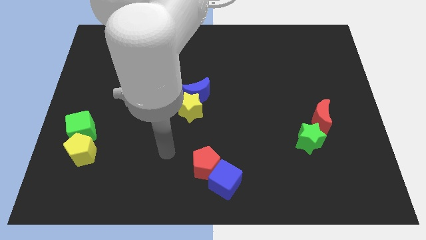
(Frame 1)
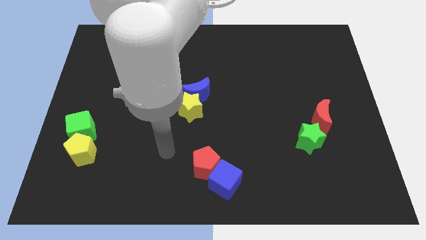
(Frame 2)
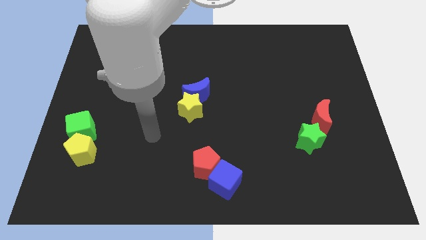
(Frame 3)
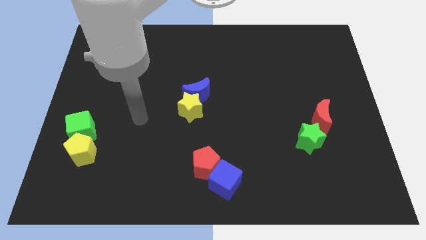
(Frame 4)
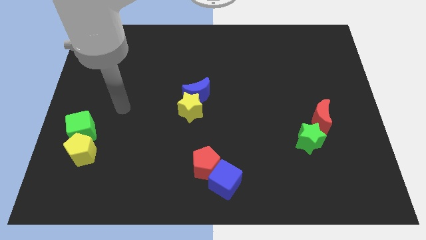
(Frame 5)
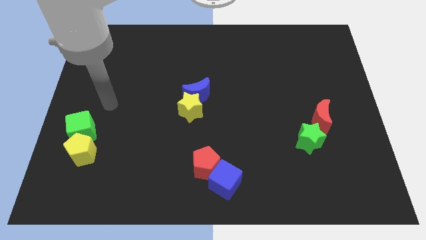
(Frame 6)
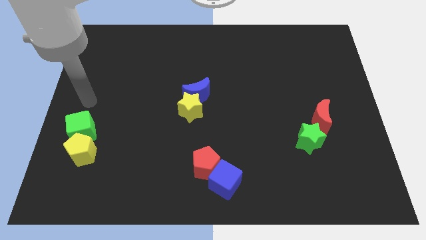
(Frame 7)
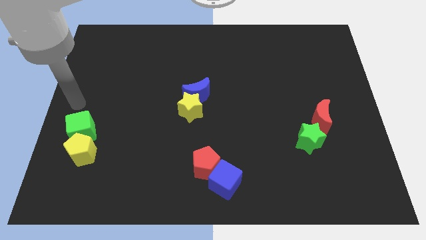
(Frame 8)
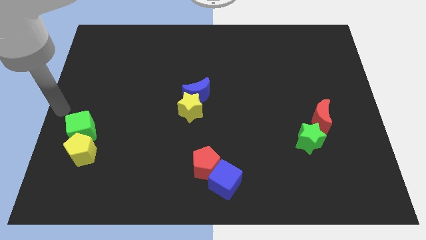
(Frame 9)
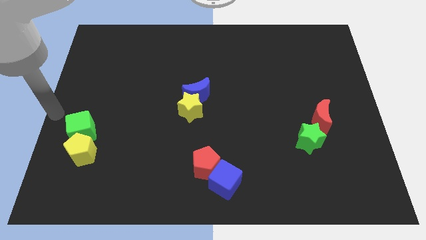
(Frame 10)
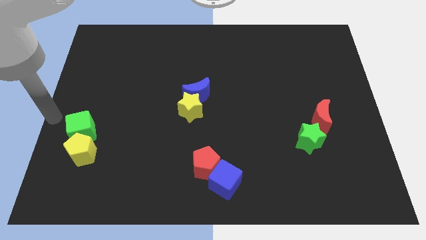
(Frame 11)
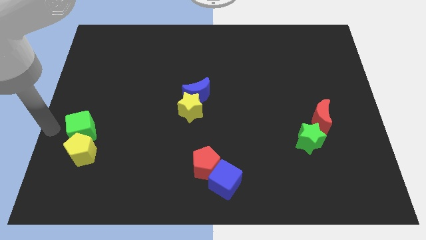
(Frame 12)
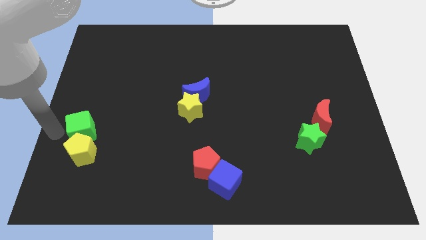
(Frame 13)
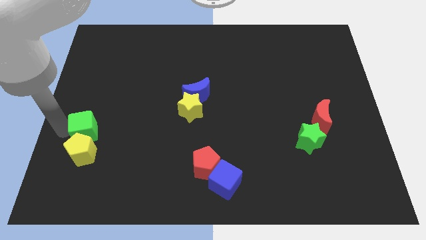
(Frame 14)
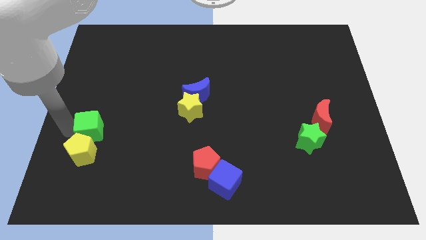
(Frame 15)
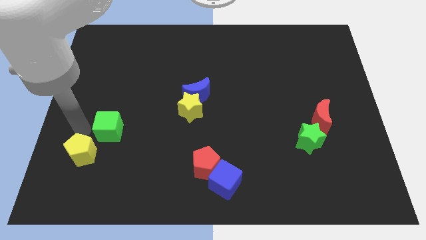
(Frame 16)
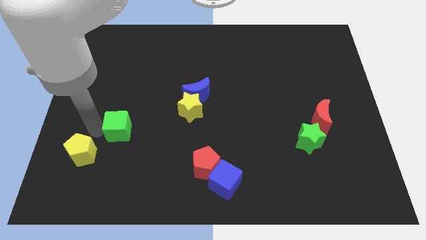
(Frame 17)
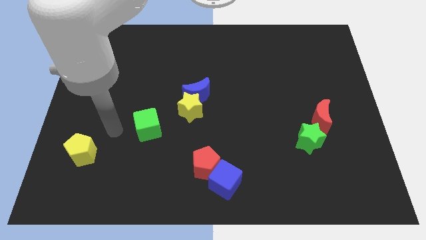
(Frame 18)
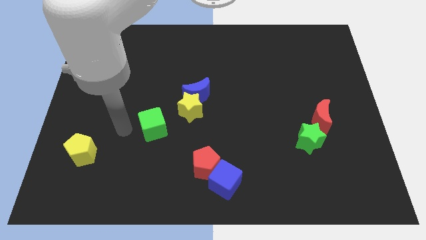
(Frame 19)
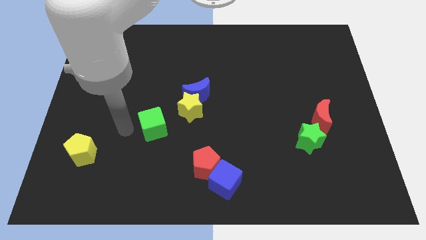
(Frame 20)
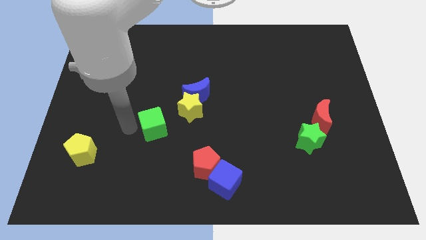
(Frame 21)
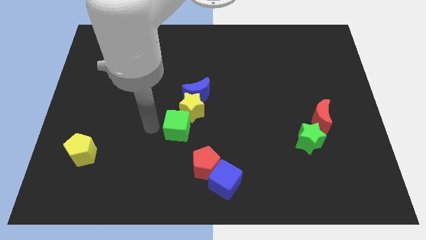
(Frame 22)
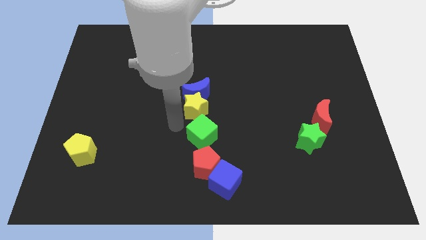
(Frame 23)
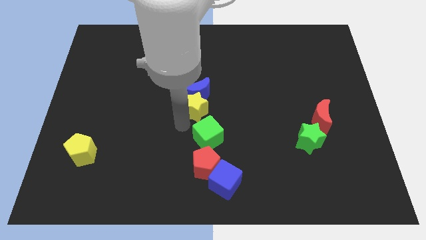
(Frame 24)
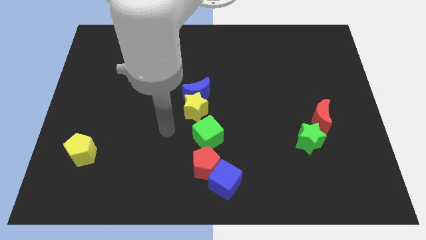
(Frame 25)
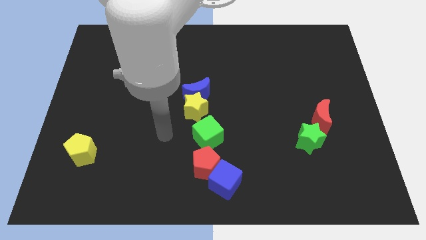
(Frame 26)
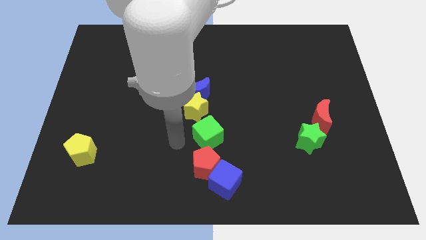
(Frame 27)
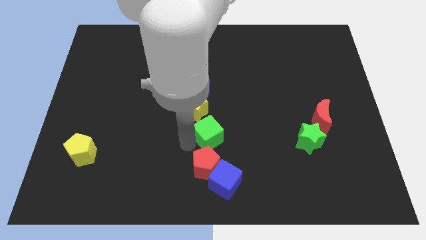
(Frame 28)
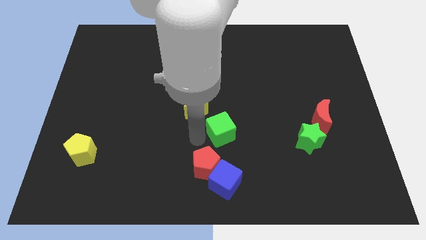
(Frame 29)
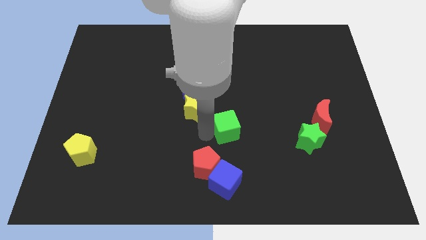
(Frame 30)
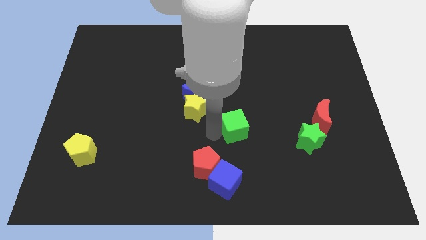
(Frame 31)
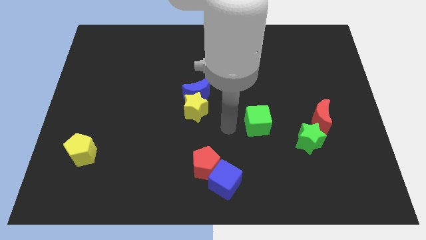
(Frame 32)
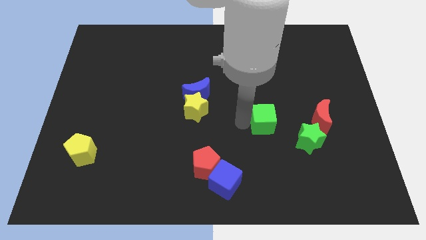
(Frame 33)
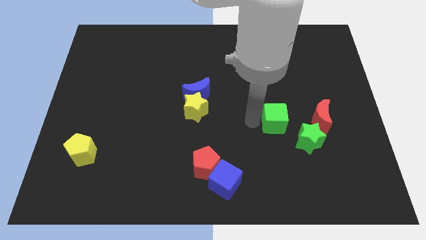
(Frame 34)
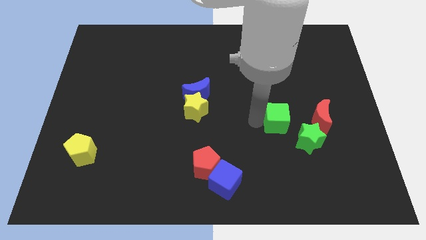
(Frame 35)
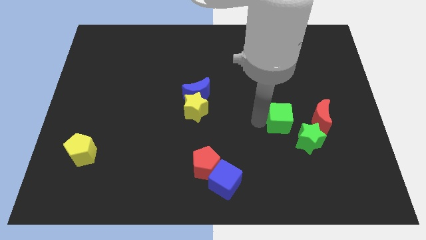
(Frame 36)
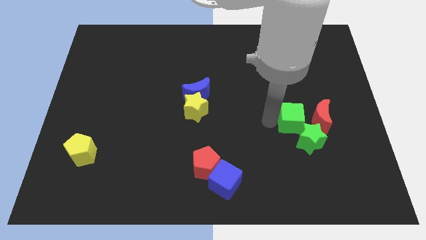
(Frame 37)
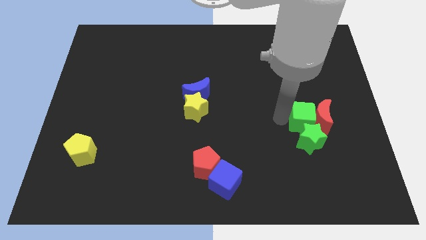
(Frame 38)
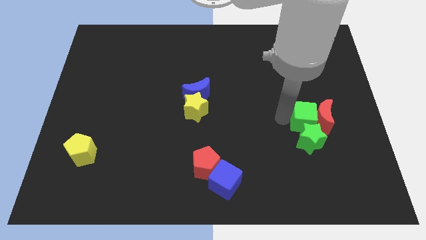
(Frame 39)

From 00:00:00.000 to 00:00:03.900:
move the green cube close to the red moon

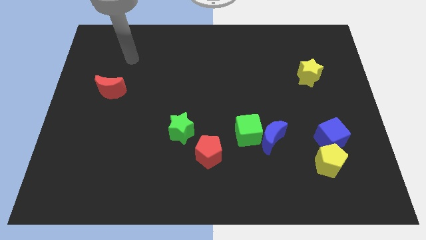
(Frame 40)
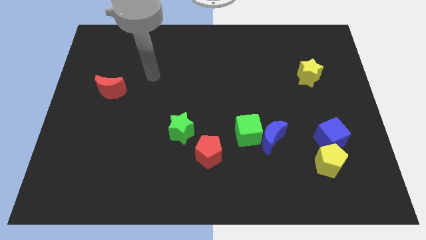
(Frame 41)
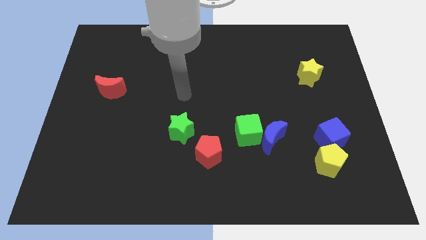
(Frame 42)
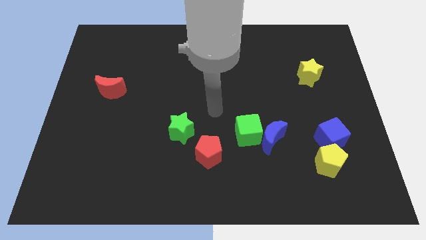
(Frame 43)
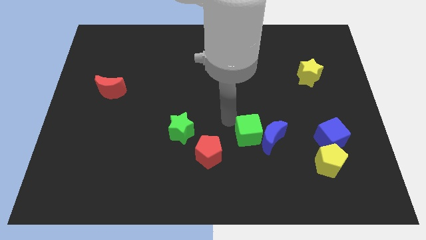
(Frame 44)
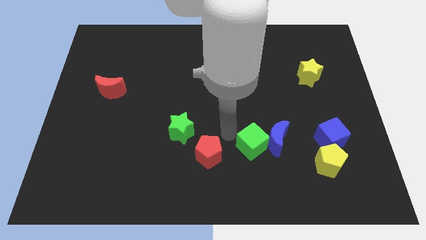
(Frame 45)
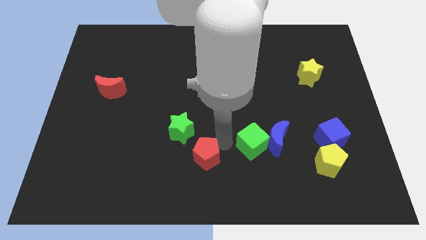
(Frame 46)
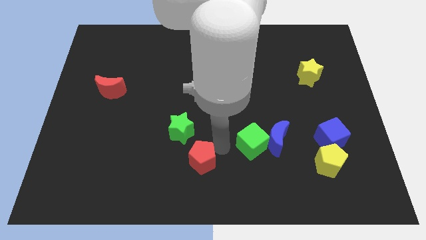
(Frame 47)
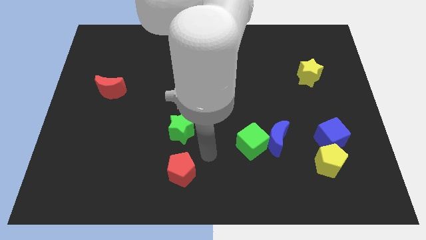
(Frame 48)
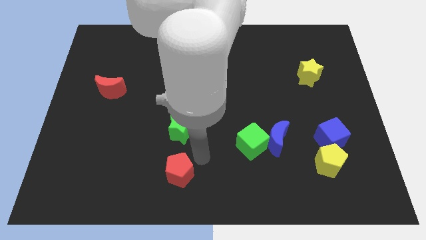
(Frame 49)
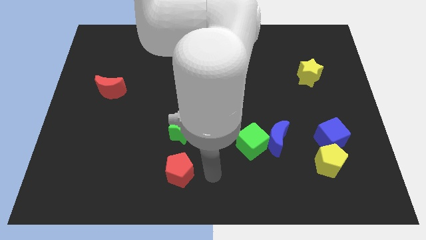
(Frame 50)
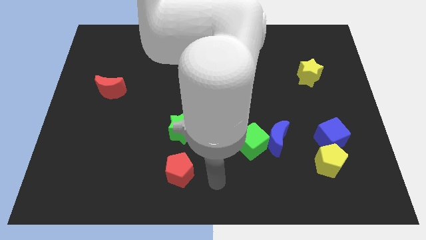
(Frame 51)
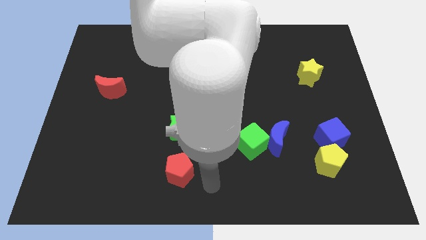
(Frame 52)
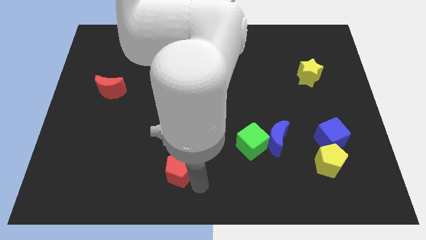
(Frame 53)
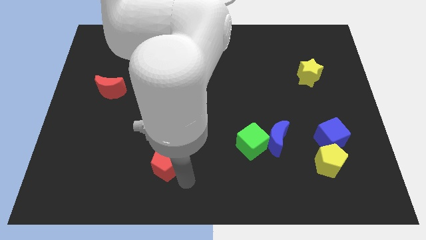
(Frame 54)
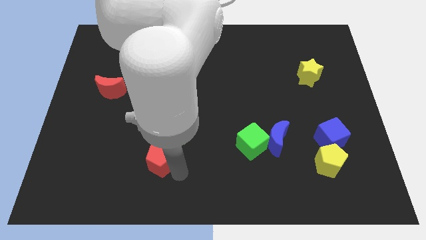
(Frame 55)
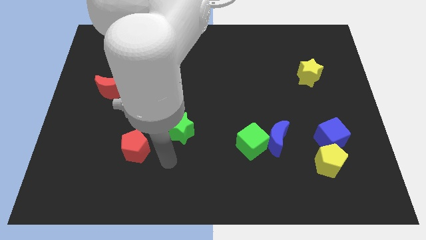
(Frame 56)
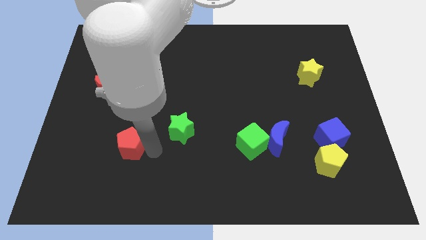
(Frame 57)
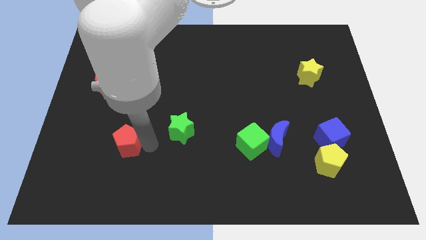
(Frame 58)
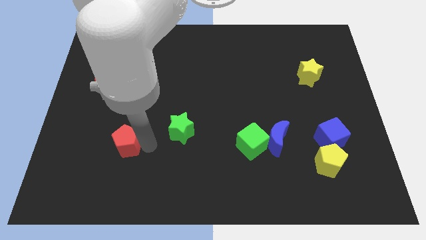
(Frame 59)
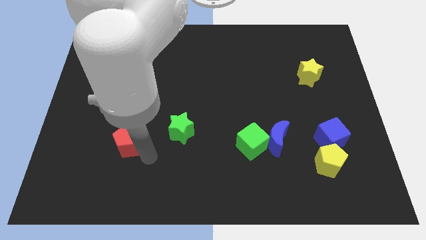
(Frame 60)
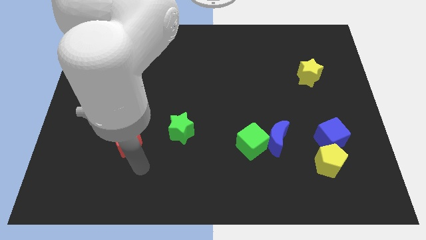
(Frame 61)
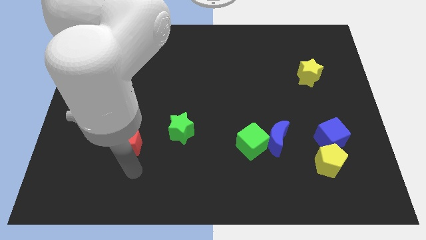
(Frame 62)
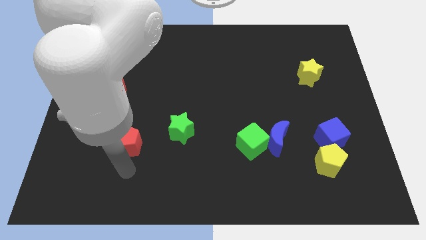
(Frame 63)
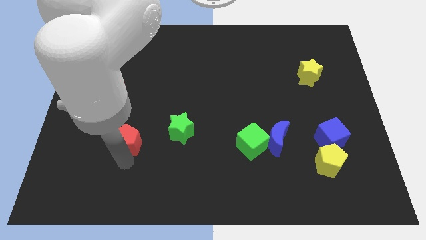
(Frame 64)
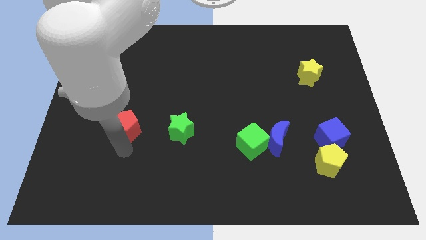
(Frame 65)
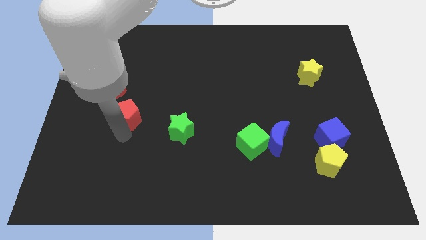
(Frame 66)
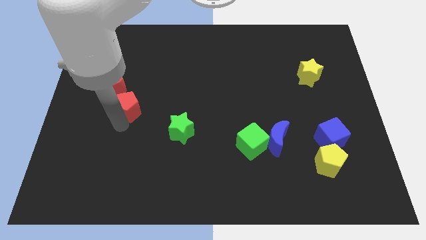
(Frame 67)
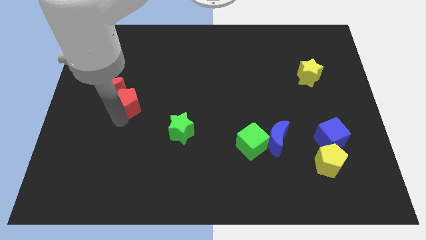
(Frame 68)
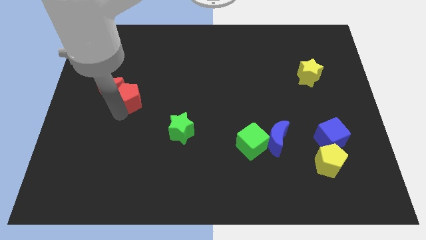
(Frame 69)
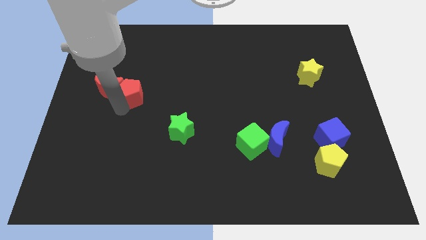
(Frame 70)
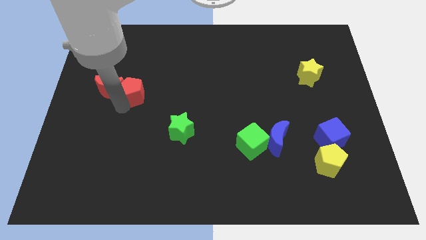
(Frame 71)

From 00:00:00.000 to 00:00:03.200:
push the red pentagon to the red moon

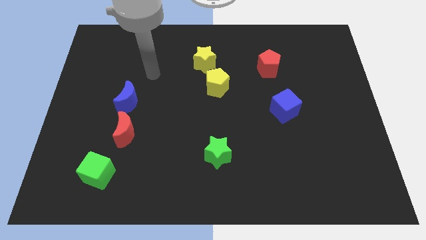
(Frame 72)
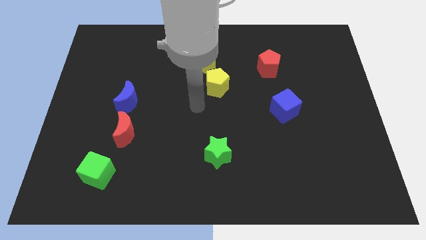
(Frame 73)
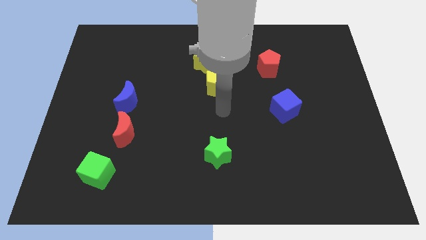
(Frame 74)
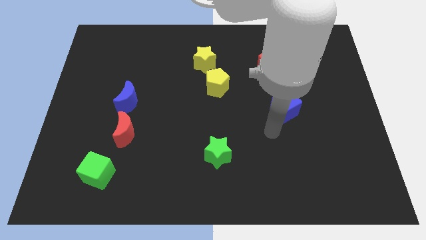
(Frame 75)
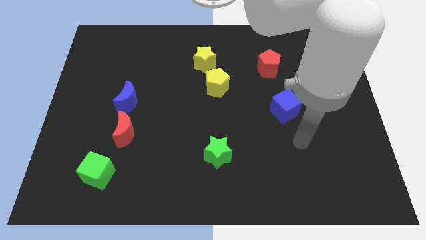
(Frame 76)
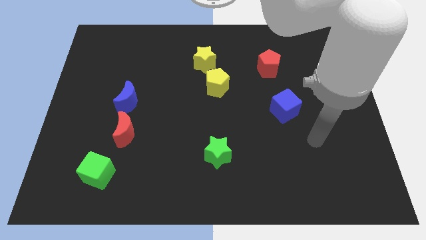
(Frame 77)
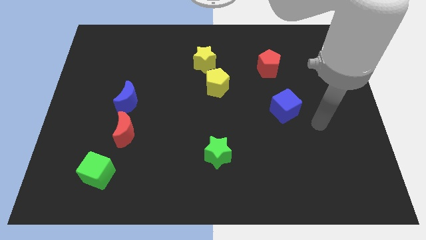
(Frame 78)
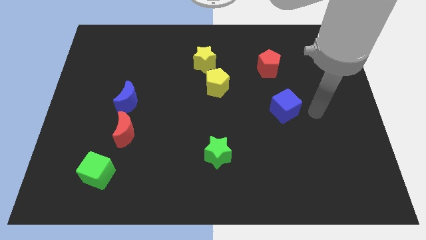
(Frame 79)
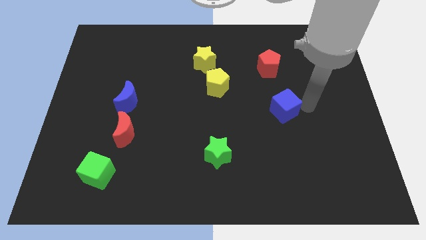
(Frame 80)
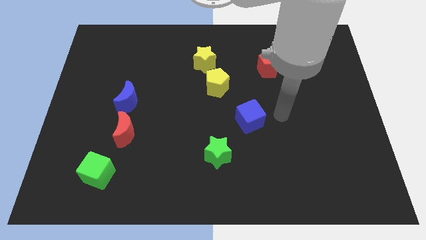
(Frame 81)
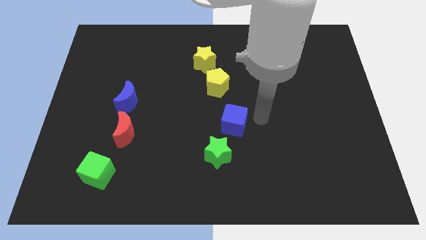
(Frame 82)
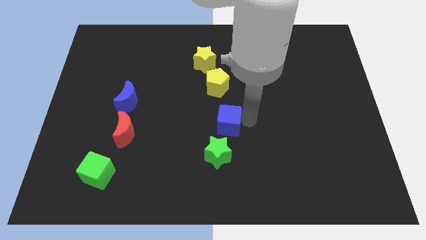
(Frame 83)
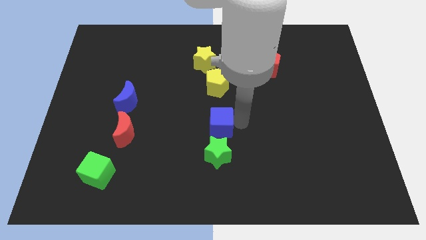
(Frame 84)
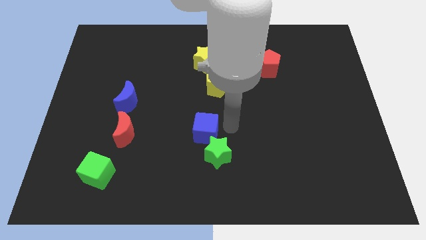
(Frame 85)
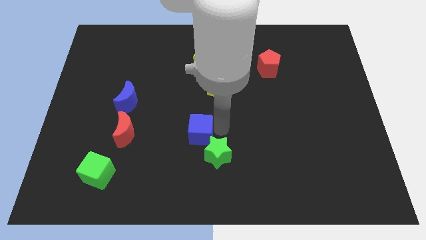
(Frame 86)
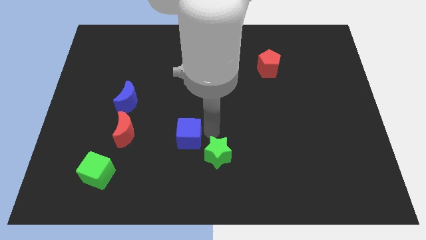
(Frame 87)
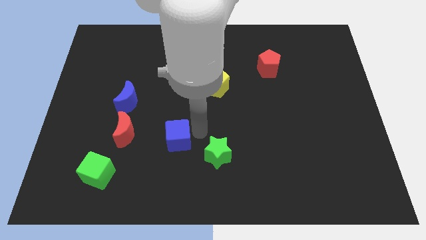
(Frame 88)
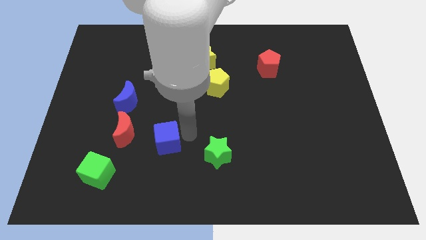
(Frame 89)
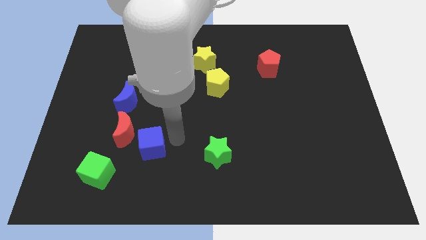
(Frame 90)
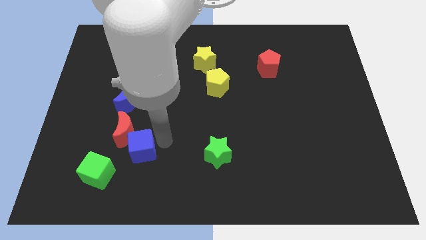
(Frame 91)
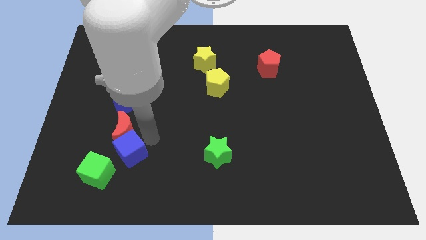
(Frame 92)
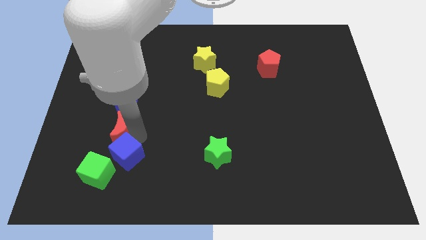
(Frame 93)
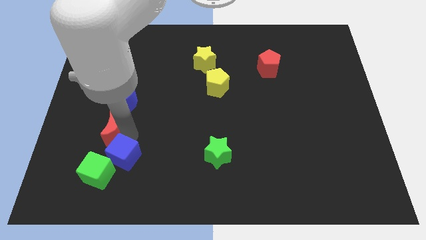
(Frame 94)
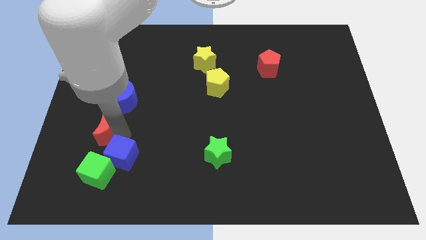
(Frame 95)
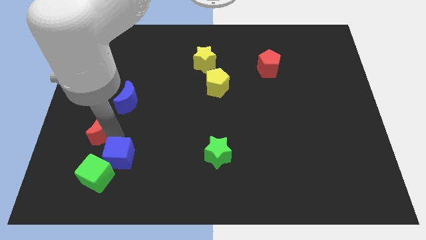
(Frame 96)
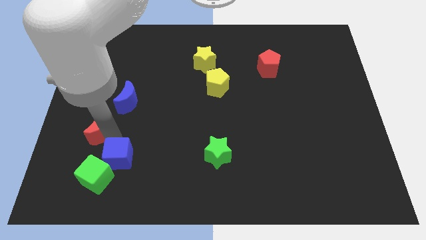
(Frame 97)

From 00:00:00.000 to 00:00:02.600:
put the blue cube towards the green cube
